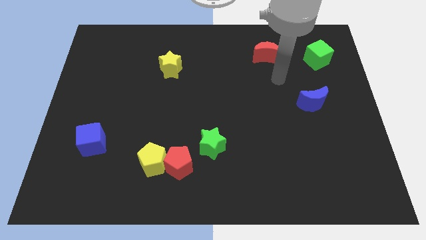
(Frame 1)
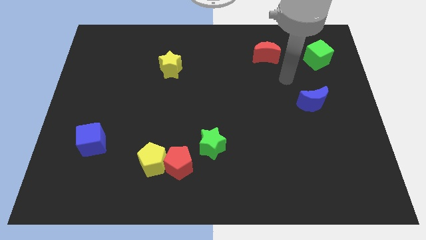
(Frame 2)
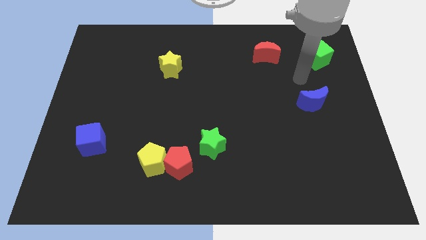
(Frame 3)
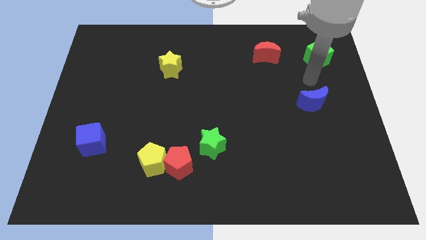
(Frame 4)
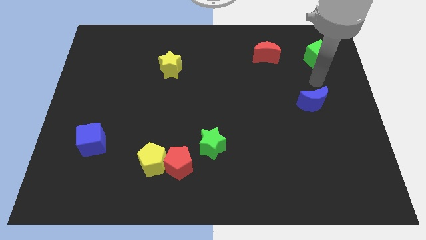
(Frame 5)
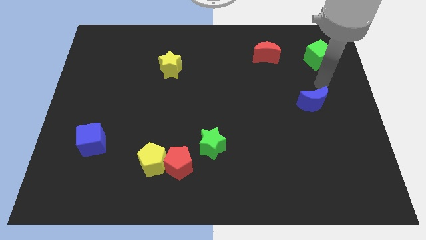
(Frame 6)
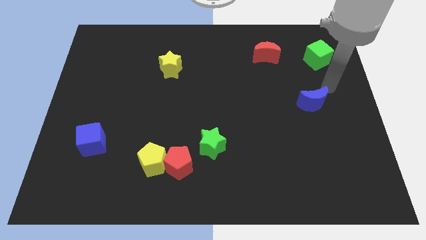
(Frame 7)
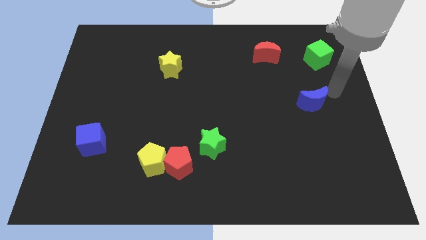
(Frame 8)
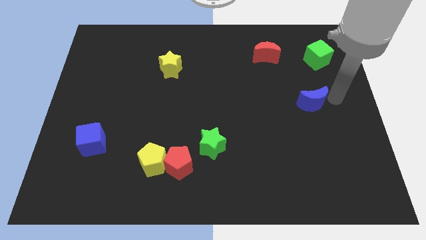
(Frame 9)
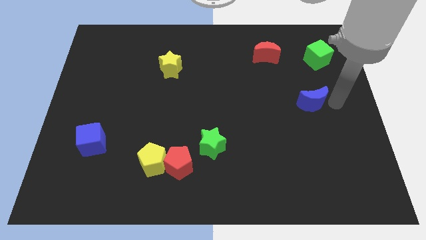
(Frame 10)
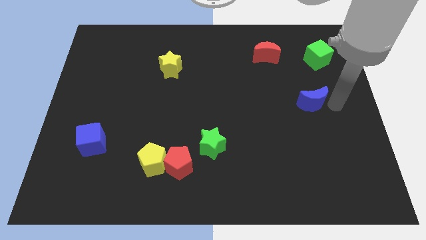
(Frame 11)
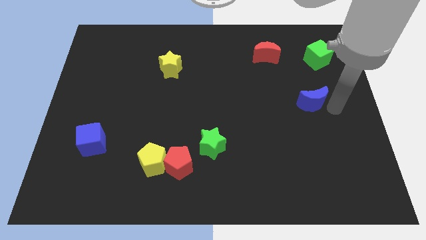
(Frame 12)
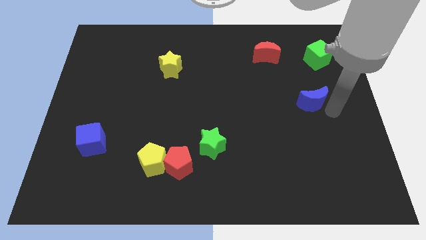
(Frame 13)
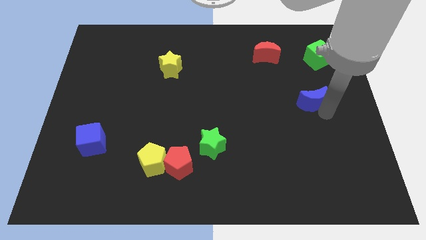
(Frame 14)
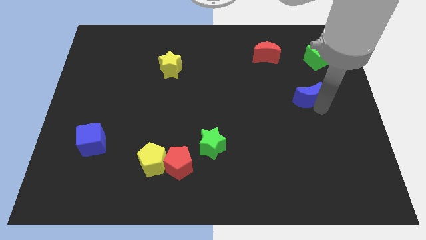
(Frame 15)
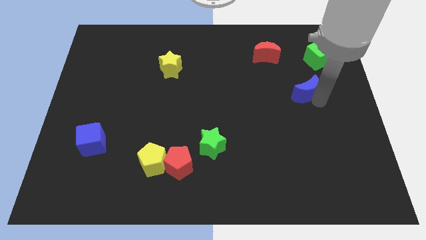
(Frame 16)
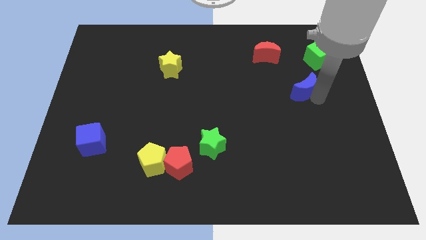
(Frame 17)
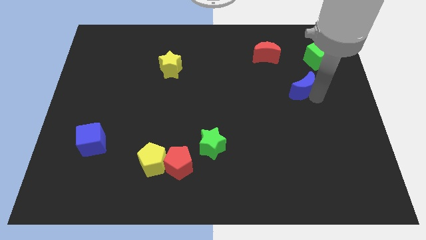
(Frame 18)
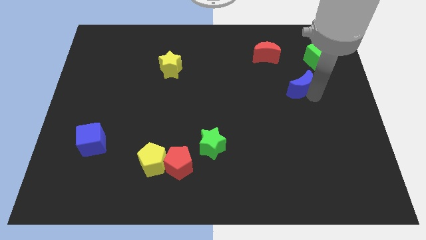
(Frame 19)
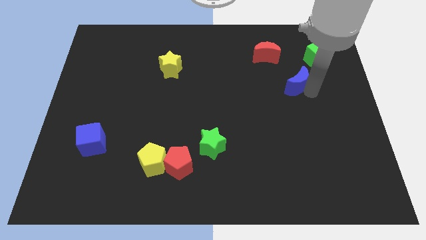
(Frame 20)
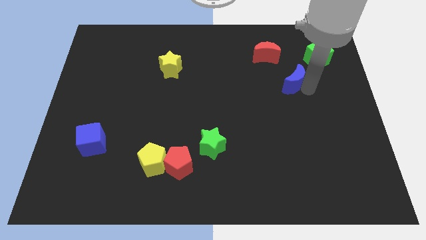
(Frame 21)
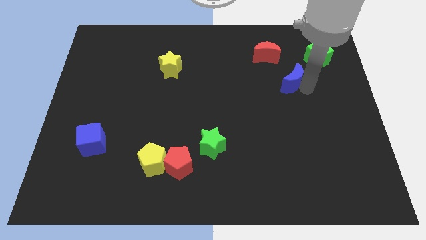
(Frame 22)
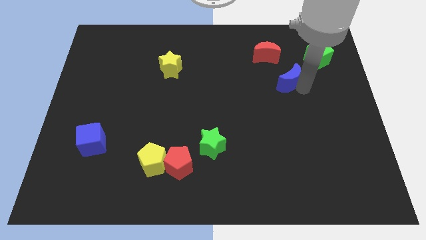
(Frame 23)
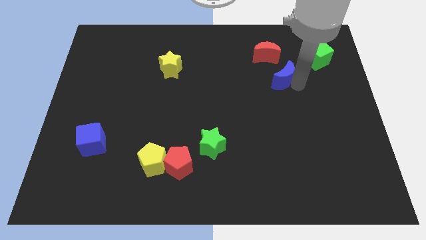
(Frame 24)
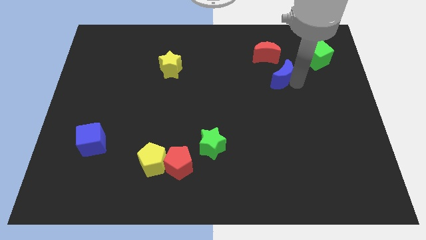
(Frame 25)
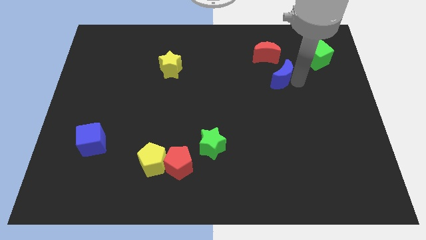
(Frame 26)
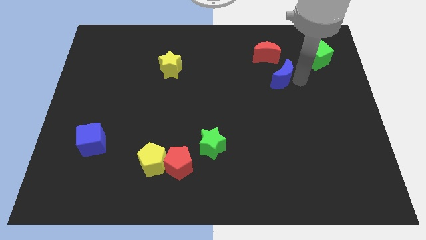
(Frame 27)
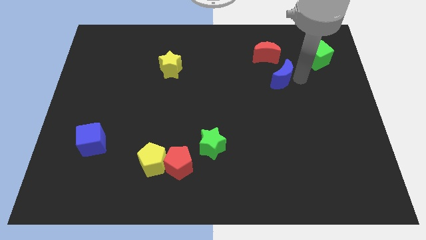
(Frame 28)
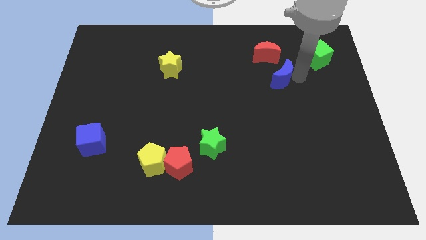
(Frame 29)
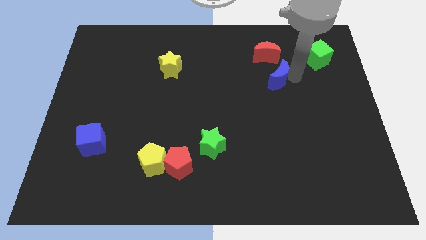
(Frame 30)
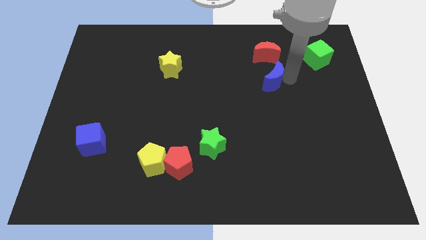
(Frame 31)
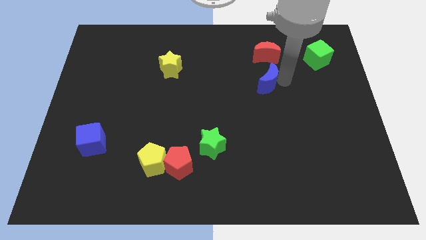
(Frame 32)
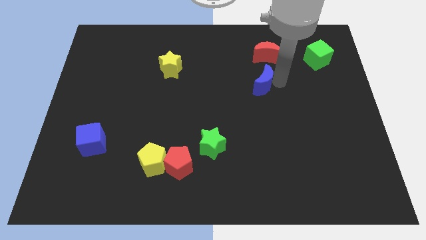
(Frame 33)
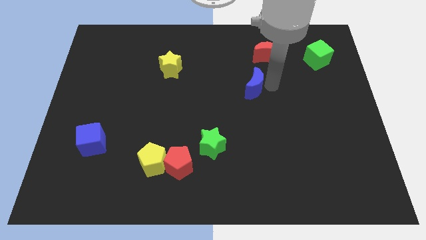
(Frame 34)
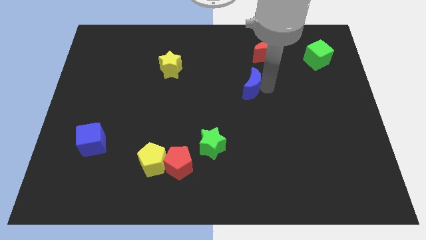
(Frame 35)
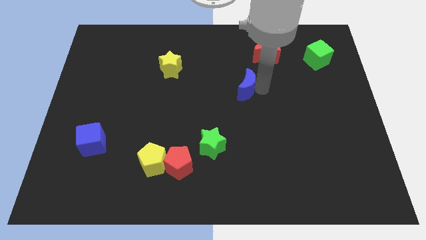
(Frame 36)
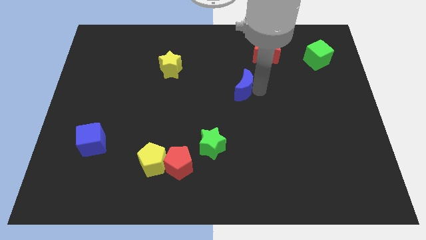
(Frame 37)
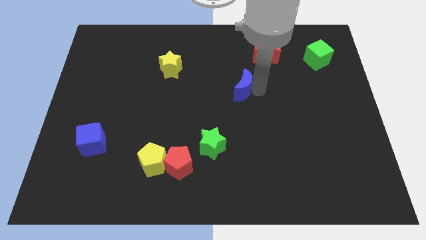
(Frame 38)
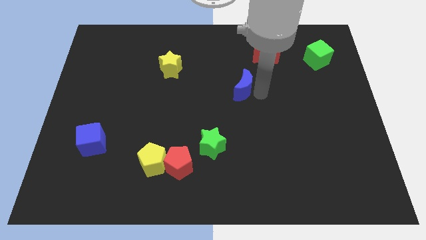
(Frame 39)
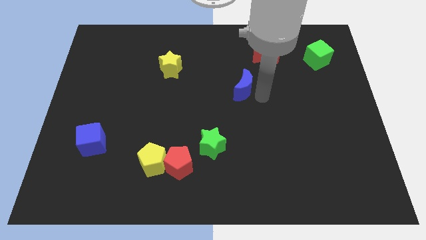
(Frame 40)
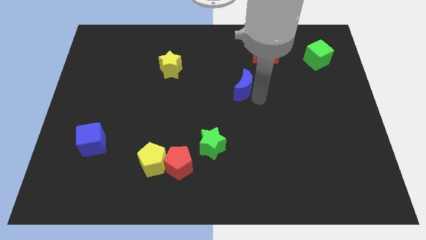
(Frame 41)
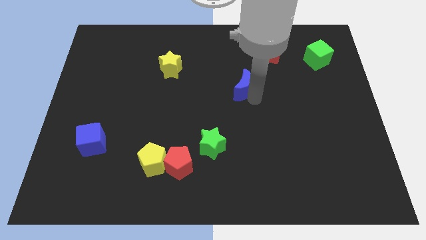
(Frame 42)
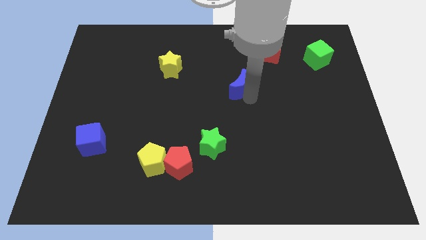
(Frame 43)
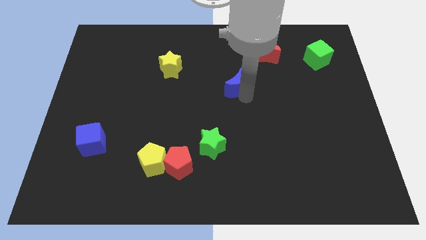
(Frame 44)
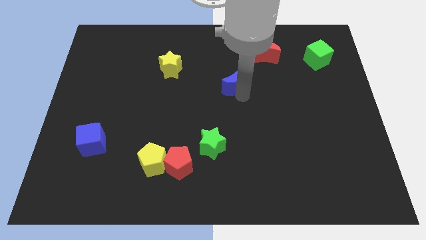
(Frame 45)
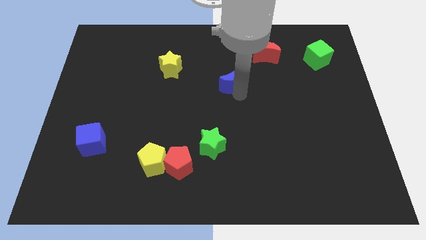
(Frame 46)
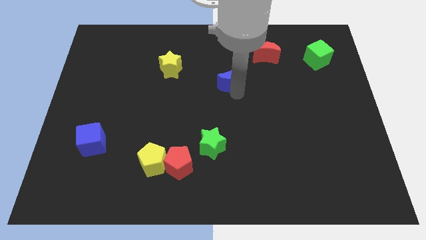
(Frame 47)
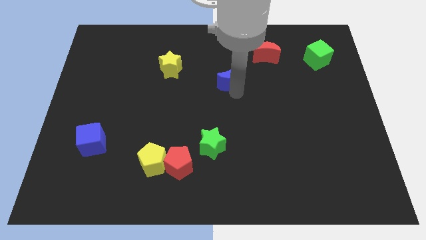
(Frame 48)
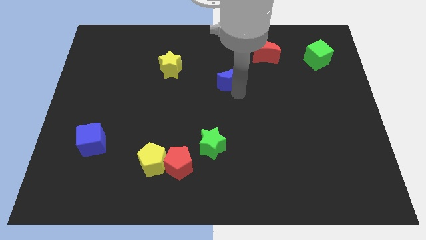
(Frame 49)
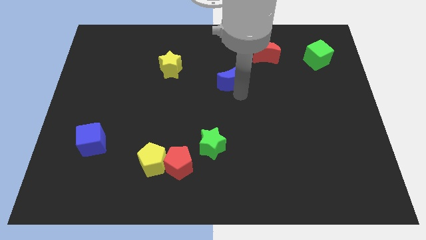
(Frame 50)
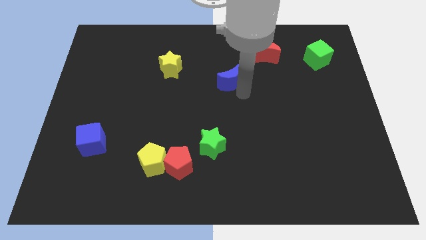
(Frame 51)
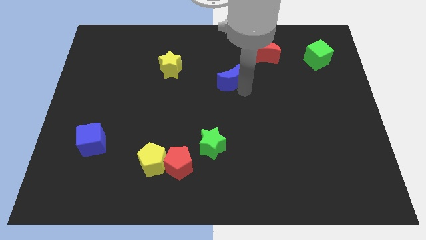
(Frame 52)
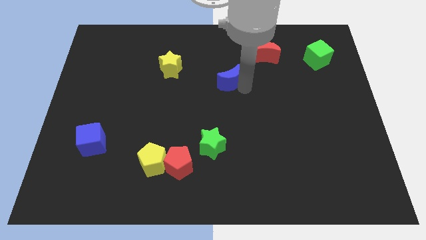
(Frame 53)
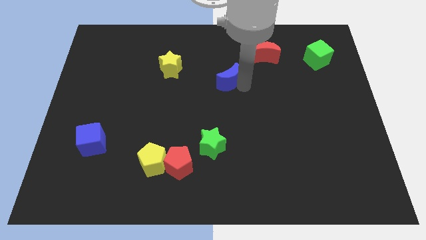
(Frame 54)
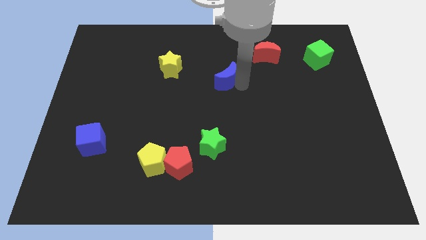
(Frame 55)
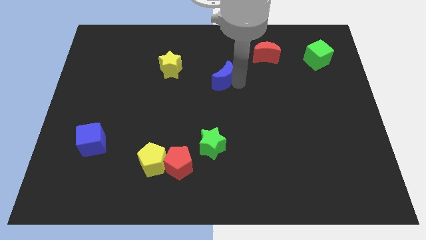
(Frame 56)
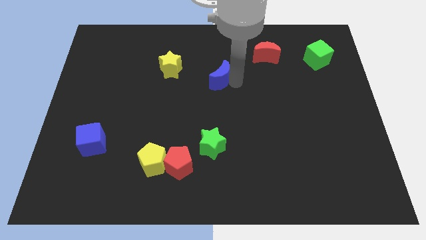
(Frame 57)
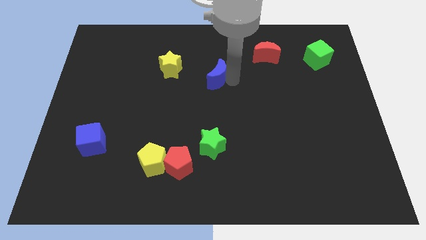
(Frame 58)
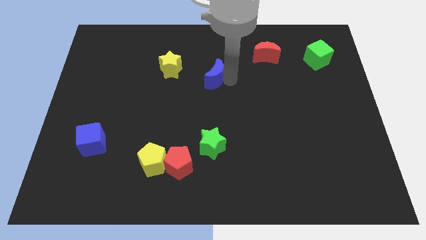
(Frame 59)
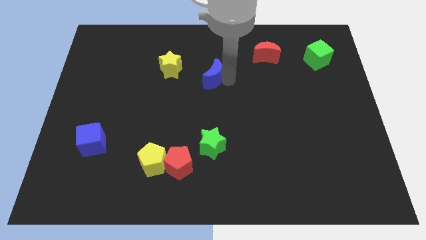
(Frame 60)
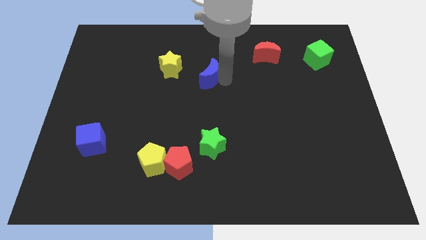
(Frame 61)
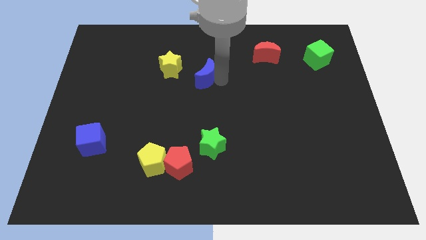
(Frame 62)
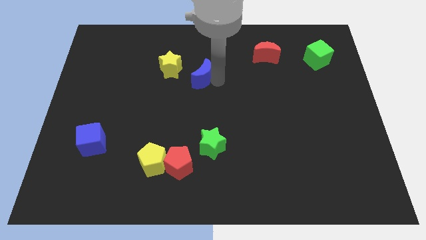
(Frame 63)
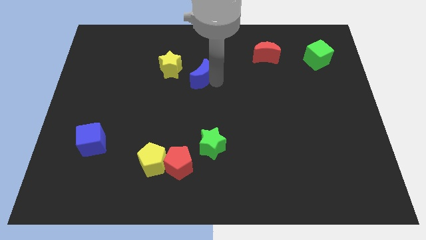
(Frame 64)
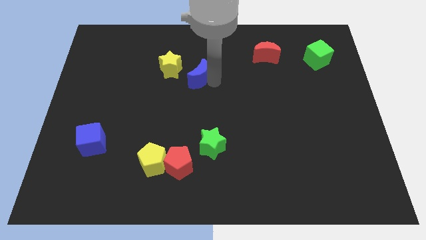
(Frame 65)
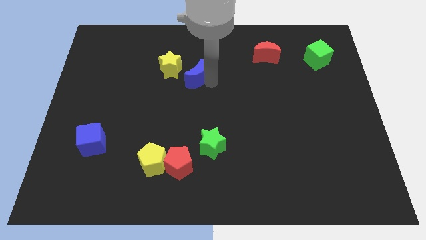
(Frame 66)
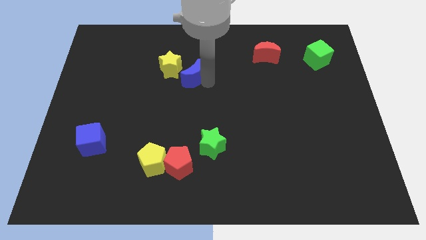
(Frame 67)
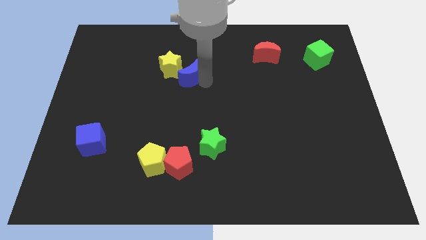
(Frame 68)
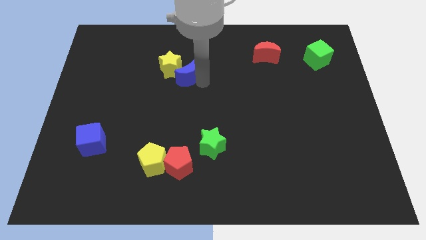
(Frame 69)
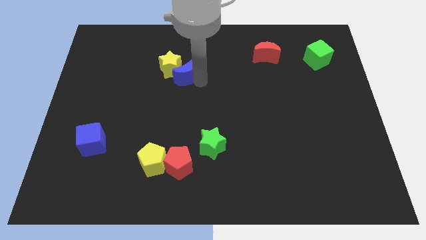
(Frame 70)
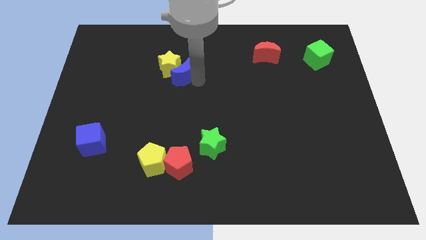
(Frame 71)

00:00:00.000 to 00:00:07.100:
push the blue moon next to the yellow star

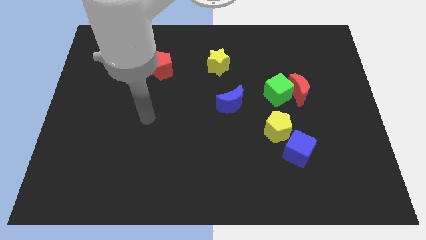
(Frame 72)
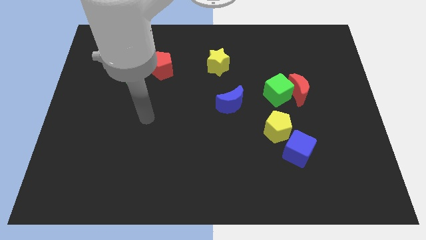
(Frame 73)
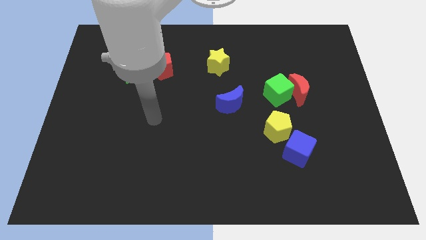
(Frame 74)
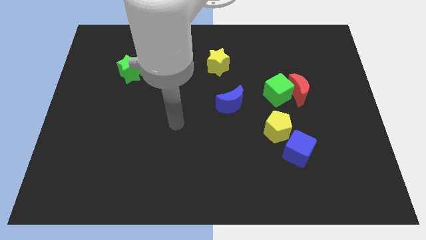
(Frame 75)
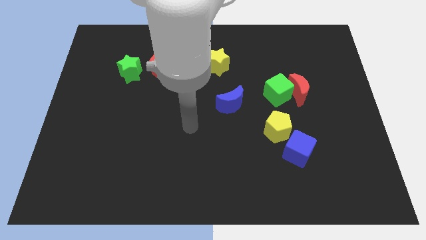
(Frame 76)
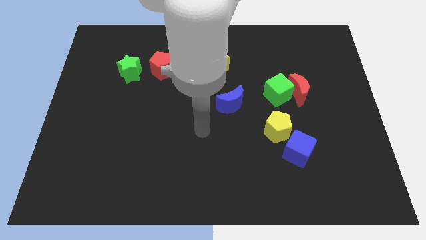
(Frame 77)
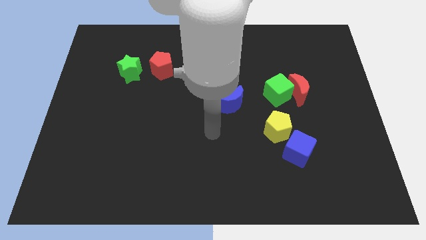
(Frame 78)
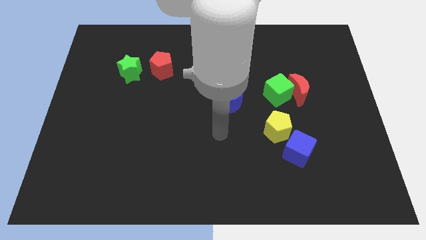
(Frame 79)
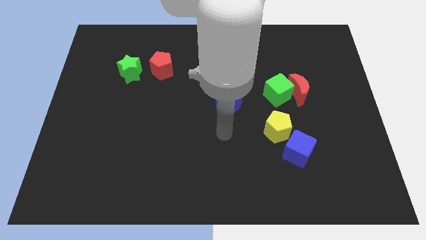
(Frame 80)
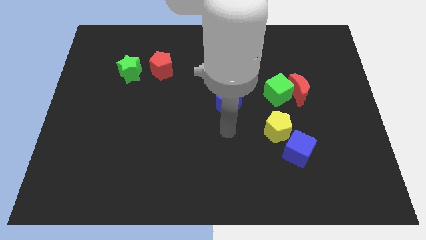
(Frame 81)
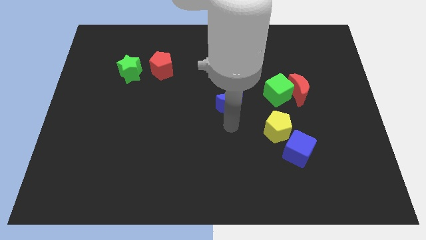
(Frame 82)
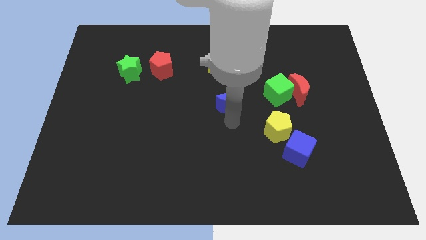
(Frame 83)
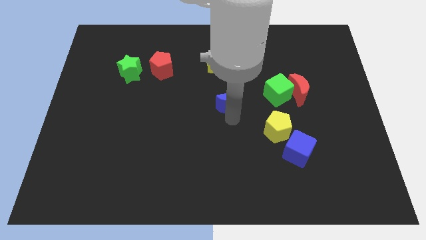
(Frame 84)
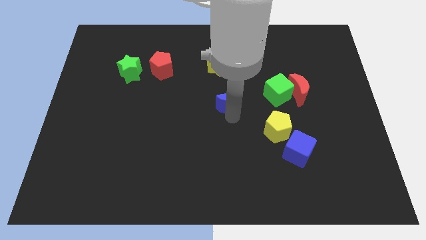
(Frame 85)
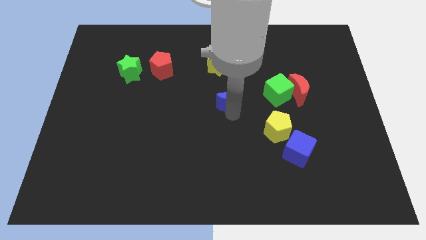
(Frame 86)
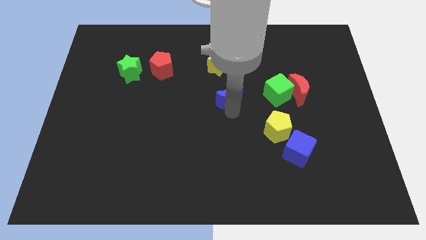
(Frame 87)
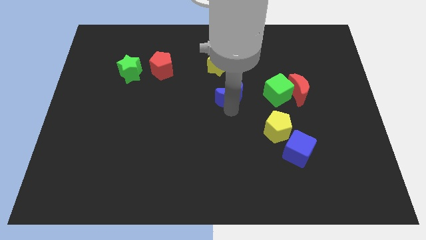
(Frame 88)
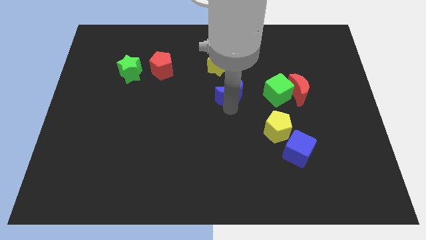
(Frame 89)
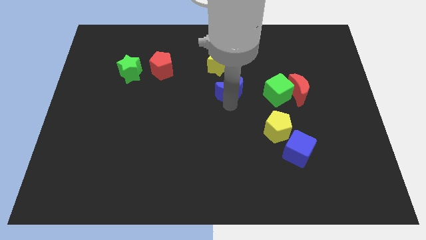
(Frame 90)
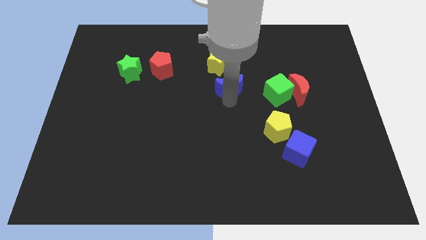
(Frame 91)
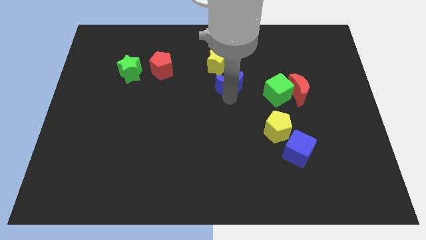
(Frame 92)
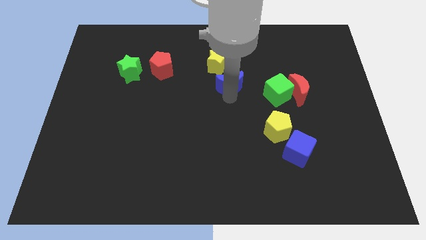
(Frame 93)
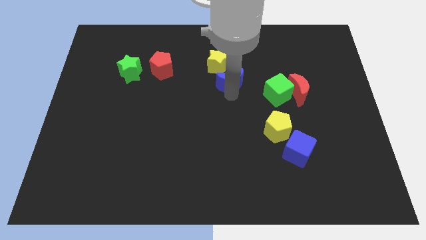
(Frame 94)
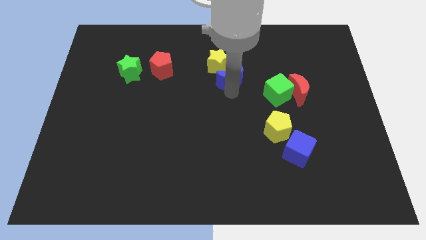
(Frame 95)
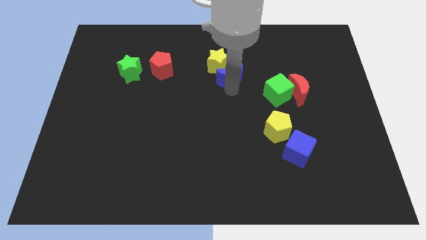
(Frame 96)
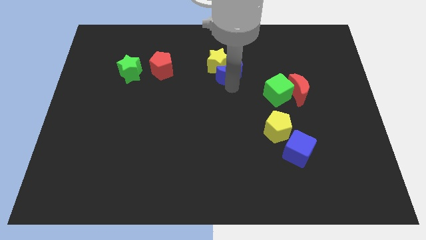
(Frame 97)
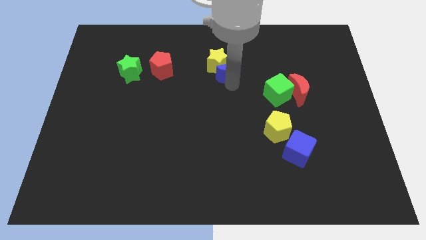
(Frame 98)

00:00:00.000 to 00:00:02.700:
put the blue moon to the yellow star
